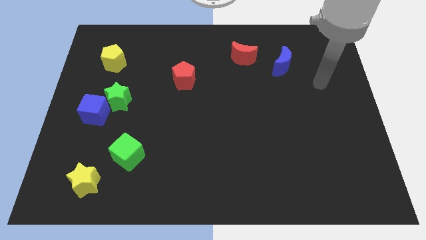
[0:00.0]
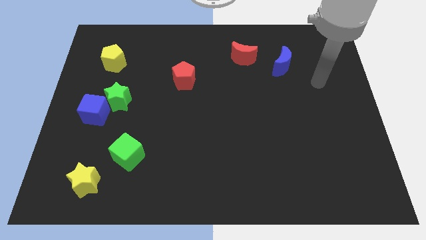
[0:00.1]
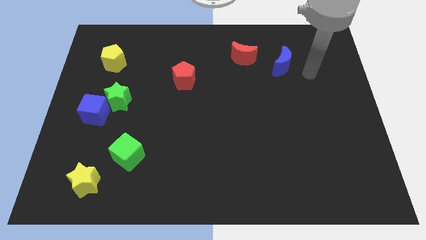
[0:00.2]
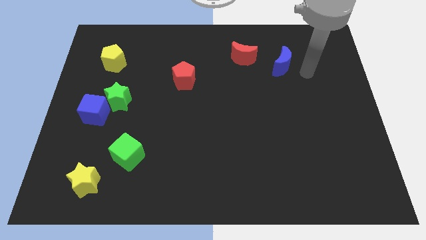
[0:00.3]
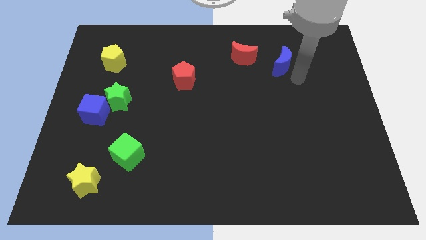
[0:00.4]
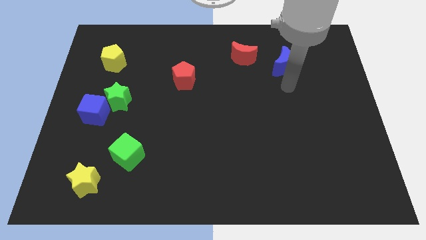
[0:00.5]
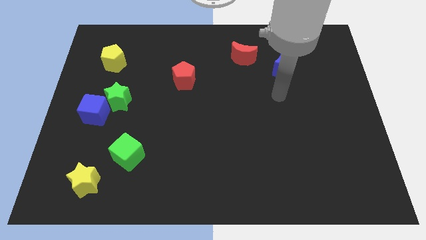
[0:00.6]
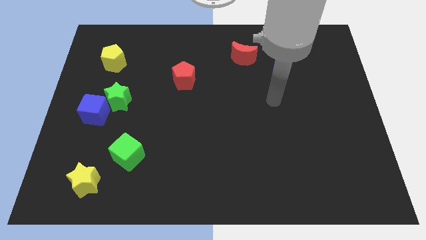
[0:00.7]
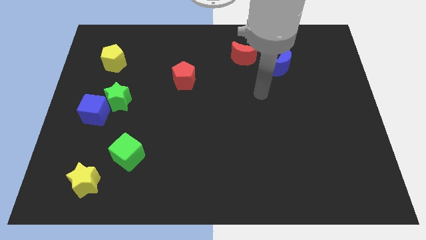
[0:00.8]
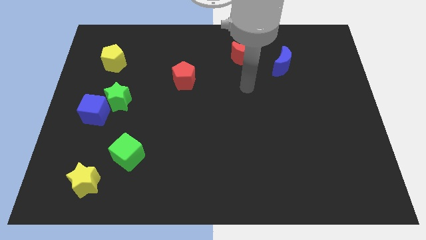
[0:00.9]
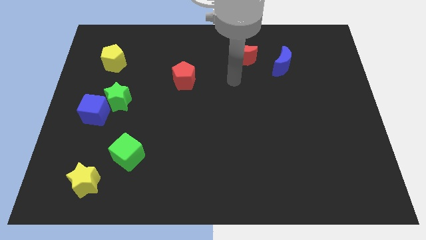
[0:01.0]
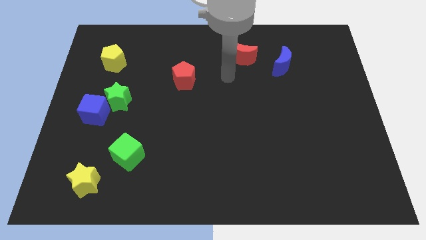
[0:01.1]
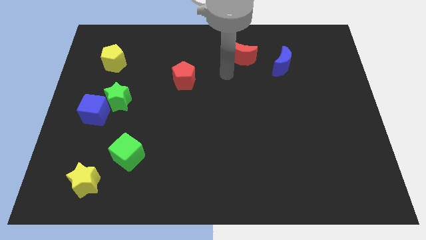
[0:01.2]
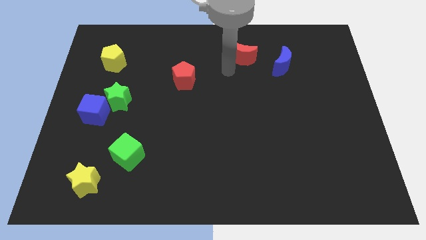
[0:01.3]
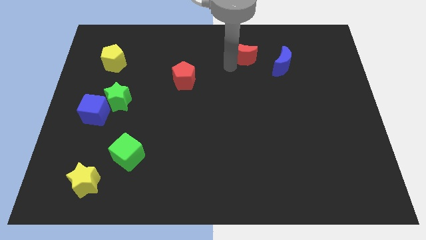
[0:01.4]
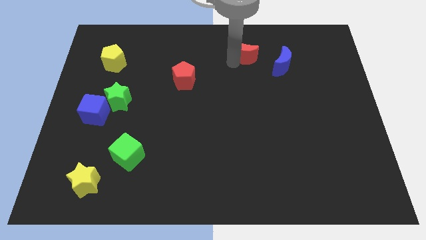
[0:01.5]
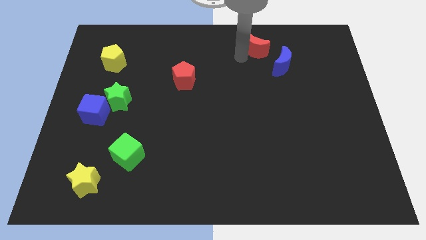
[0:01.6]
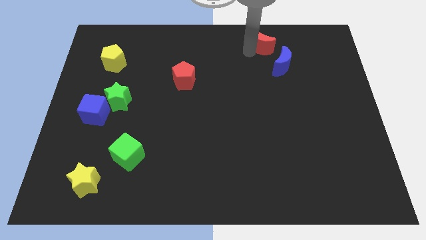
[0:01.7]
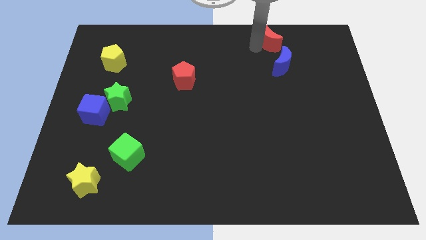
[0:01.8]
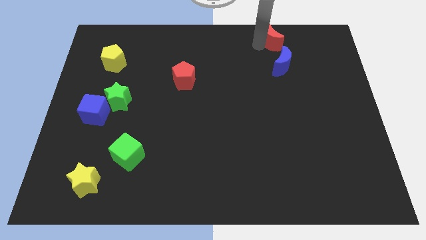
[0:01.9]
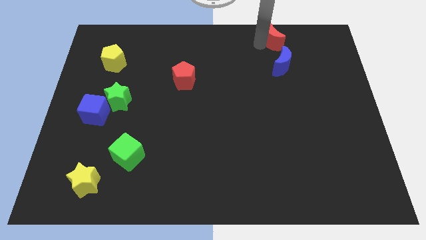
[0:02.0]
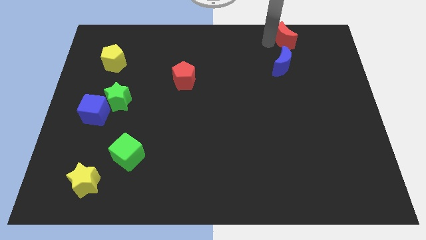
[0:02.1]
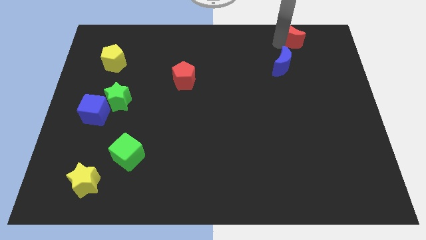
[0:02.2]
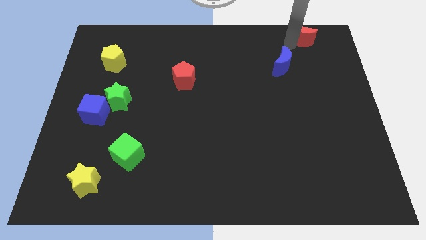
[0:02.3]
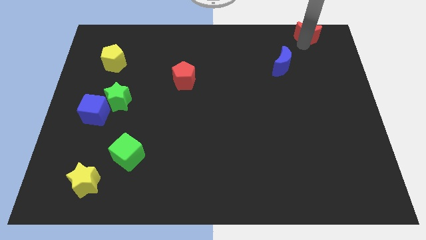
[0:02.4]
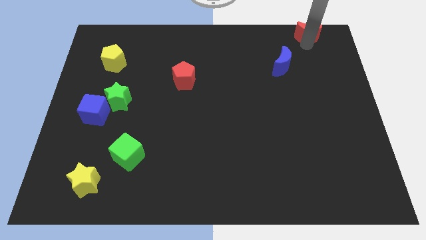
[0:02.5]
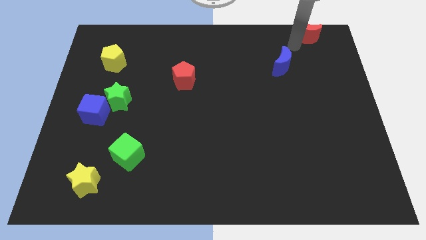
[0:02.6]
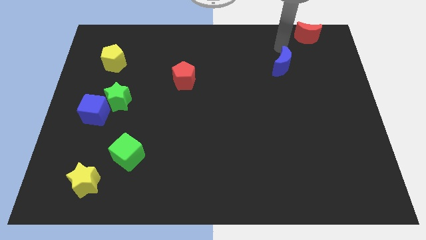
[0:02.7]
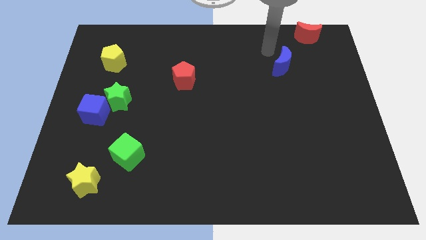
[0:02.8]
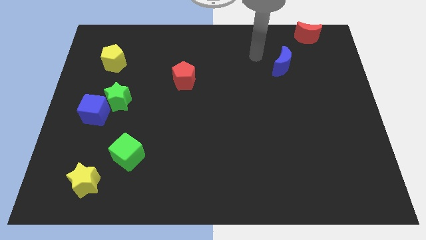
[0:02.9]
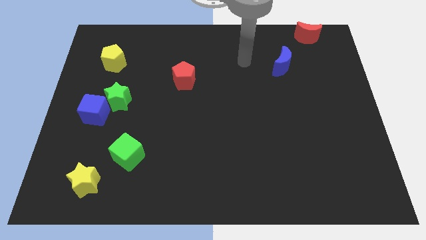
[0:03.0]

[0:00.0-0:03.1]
push the red moon towards the top right side of the board

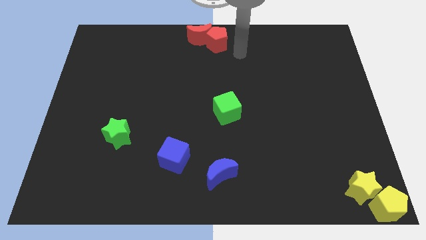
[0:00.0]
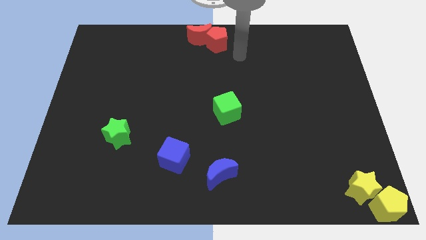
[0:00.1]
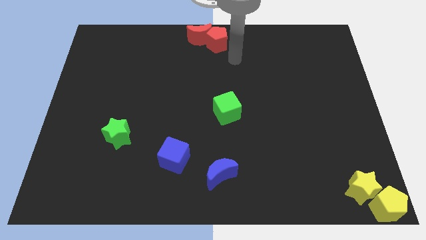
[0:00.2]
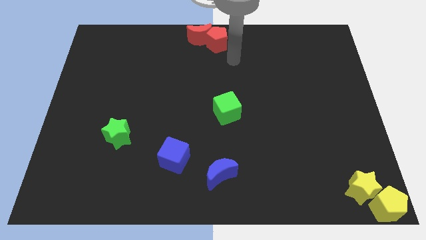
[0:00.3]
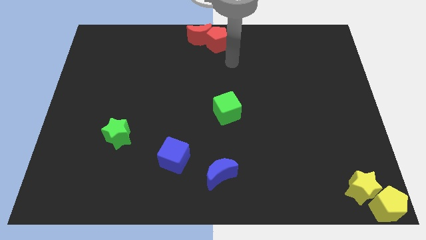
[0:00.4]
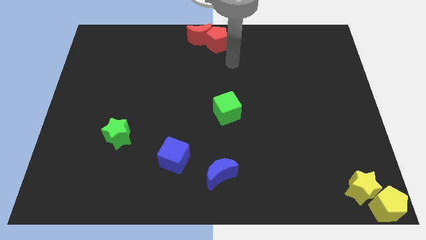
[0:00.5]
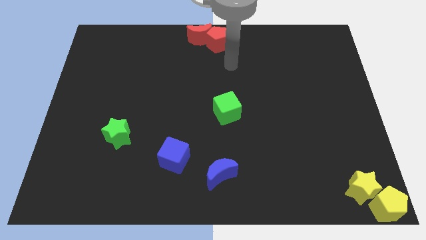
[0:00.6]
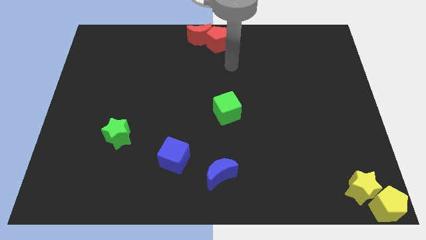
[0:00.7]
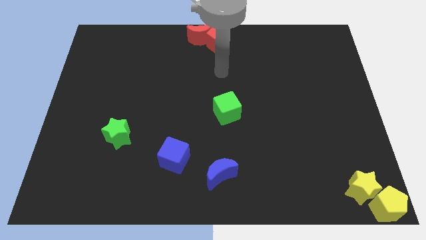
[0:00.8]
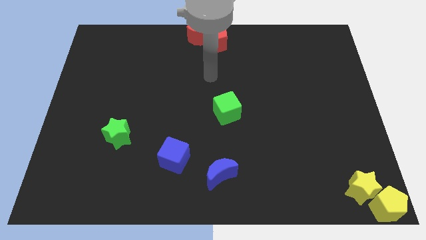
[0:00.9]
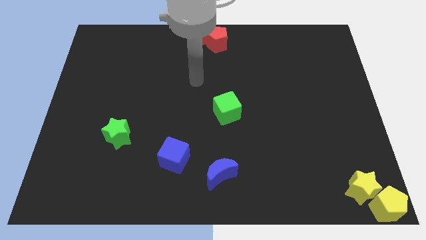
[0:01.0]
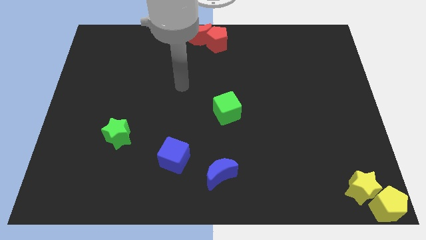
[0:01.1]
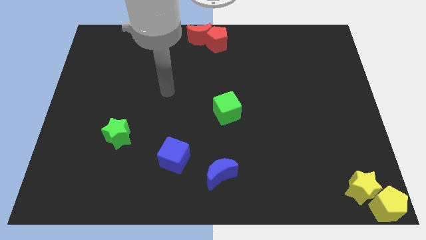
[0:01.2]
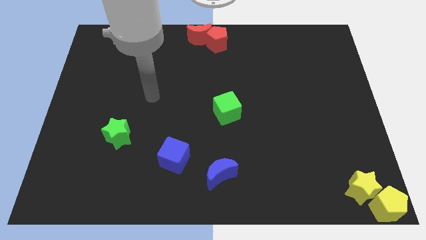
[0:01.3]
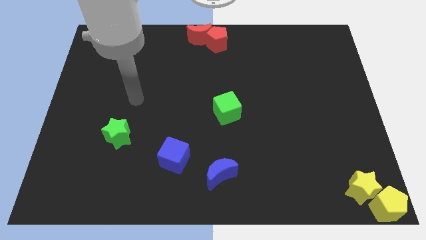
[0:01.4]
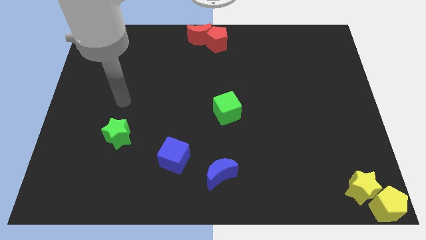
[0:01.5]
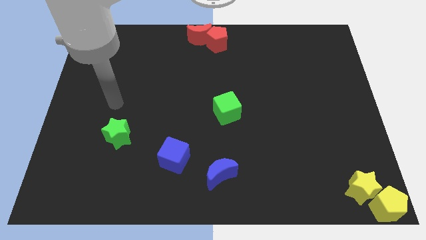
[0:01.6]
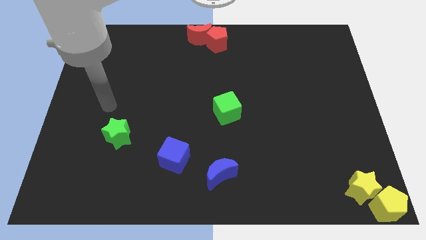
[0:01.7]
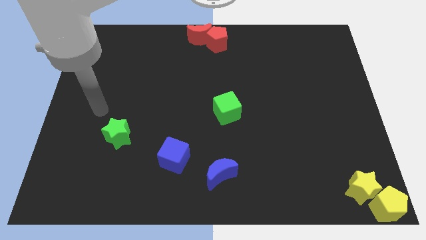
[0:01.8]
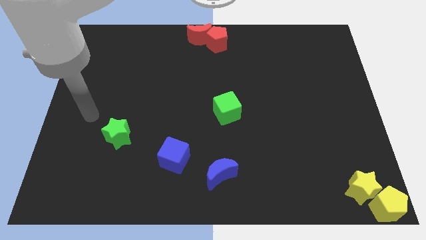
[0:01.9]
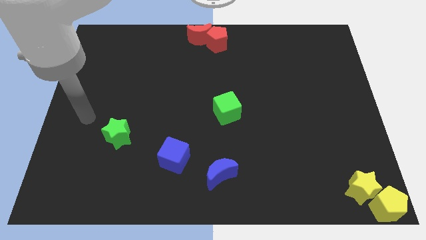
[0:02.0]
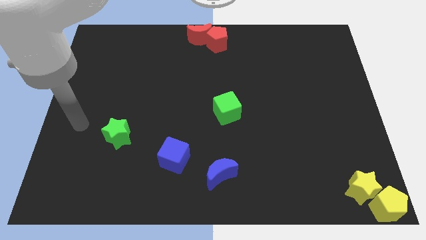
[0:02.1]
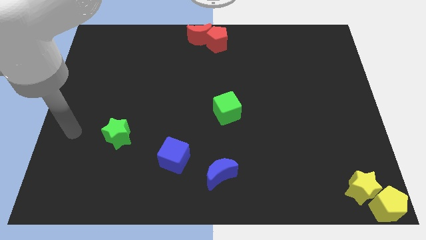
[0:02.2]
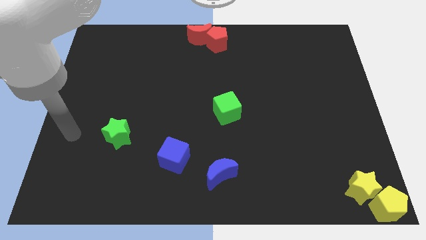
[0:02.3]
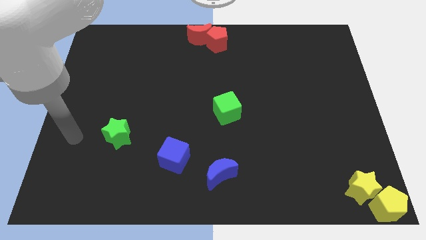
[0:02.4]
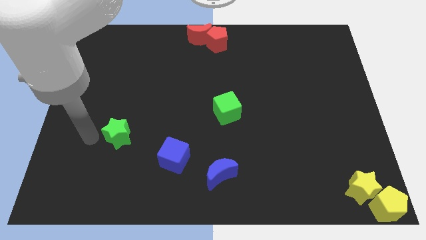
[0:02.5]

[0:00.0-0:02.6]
point your arm to the left side of green star

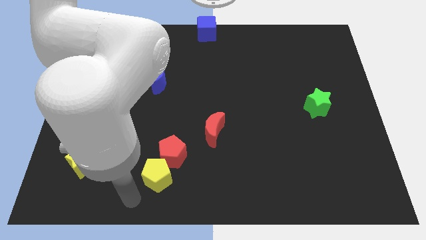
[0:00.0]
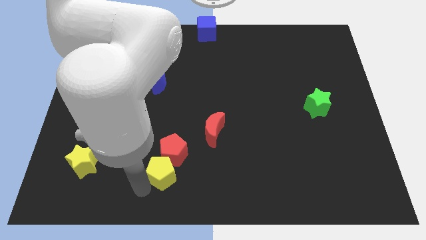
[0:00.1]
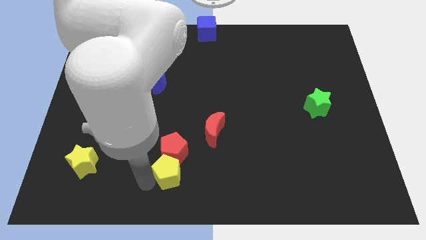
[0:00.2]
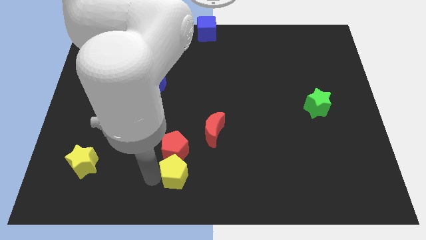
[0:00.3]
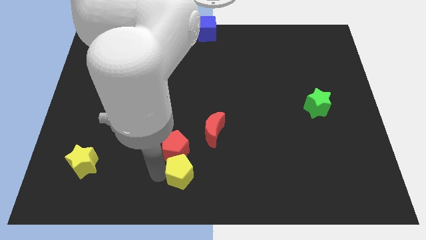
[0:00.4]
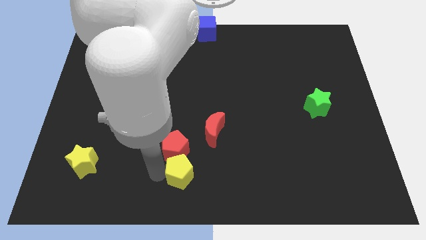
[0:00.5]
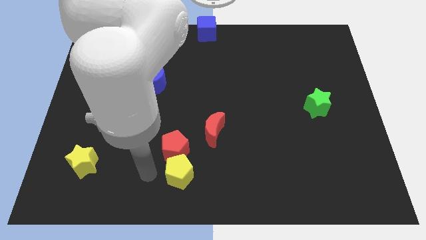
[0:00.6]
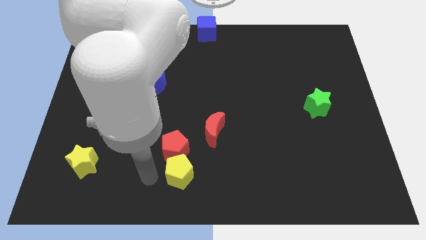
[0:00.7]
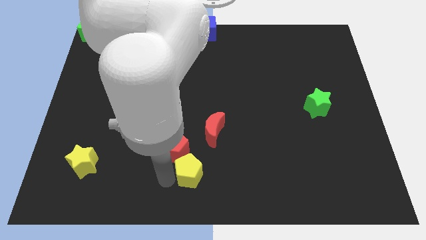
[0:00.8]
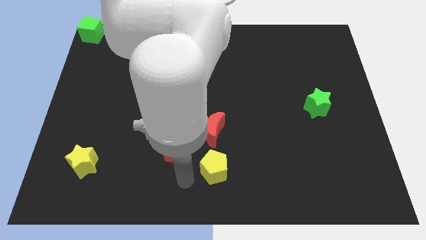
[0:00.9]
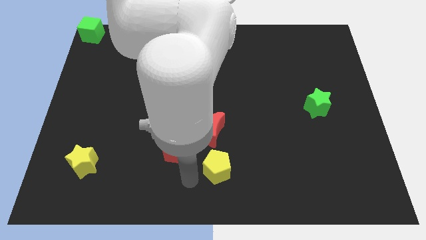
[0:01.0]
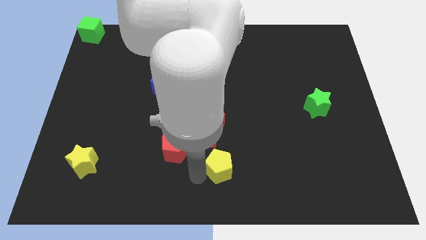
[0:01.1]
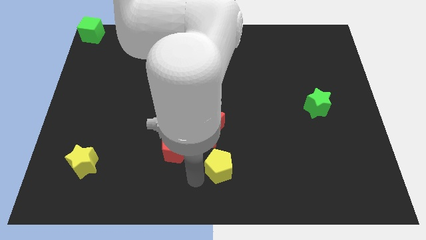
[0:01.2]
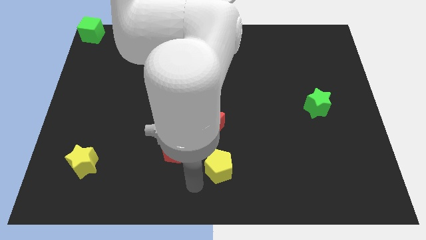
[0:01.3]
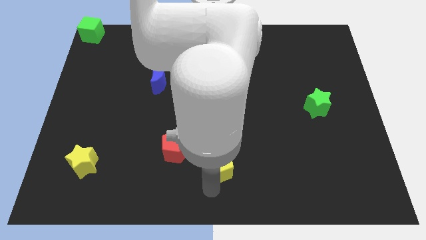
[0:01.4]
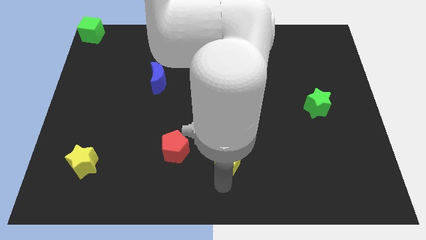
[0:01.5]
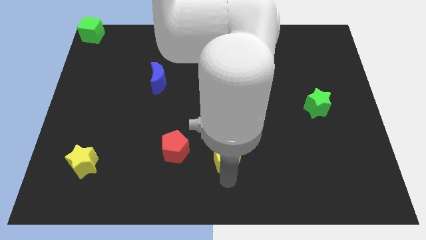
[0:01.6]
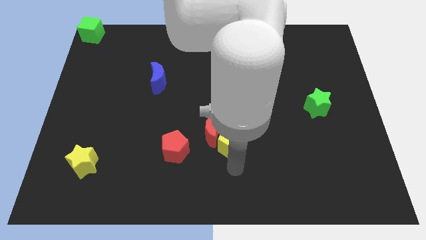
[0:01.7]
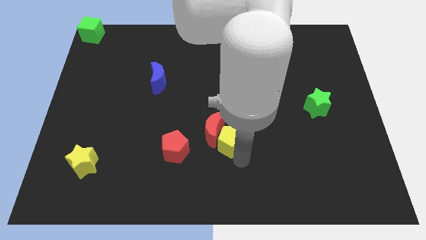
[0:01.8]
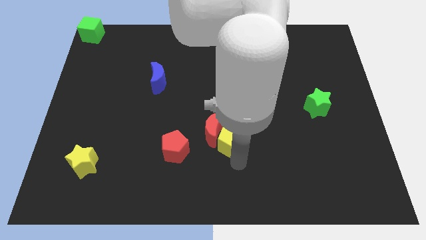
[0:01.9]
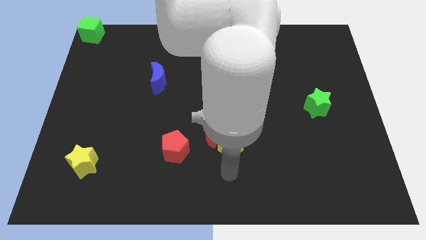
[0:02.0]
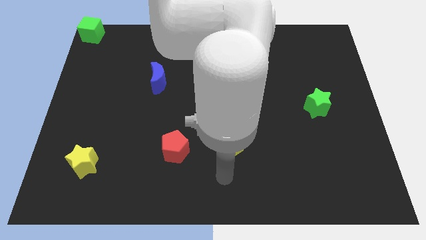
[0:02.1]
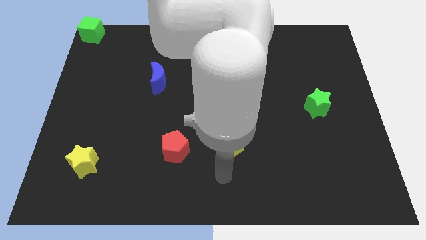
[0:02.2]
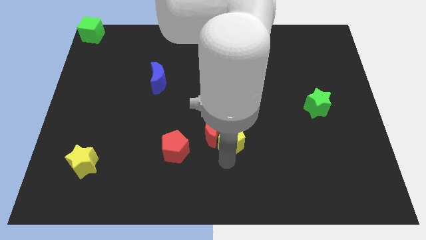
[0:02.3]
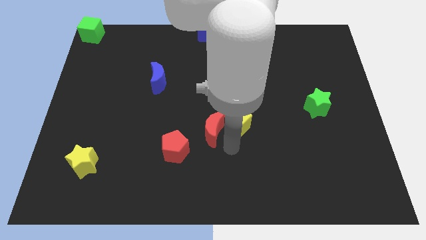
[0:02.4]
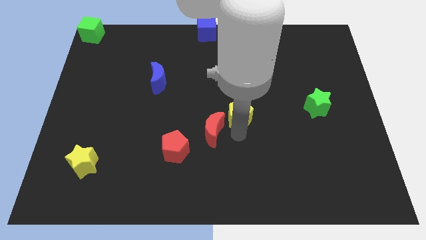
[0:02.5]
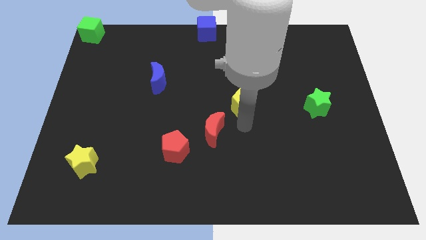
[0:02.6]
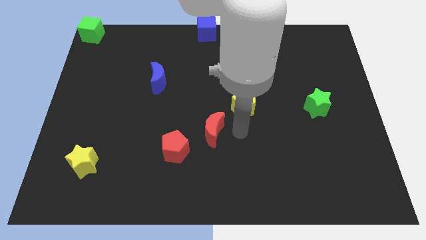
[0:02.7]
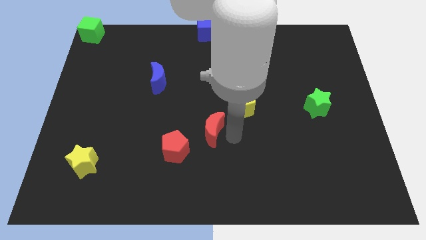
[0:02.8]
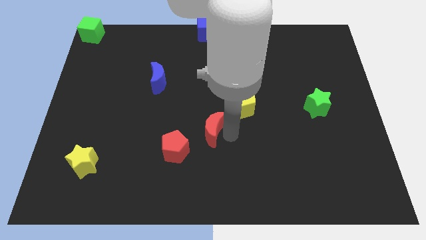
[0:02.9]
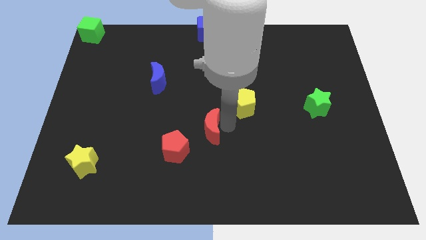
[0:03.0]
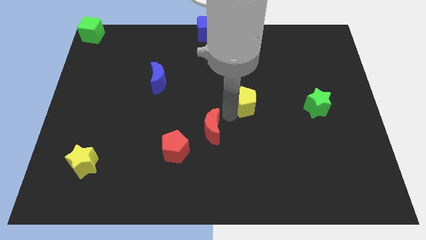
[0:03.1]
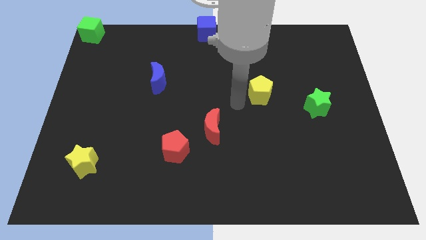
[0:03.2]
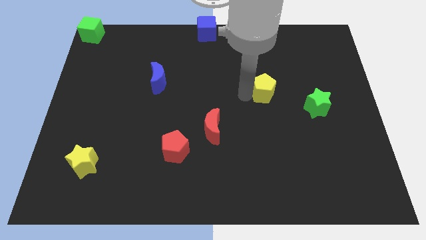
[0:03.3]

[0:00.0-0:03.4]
push the yellow pentagon to the top right of the red crescent
